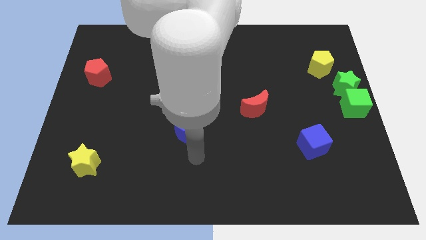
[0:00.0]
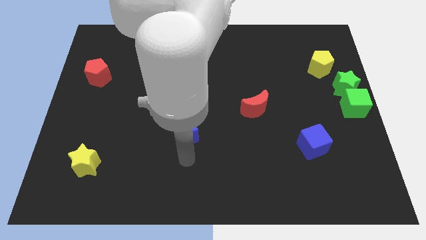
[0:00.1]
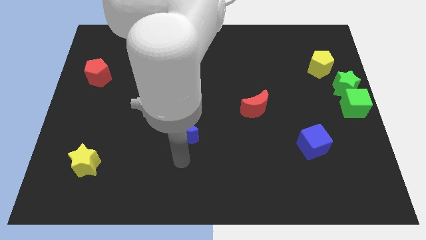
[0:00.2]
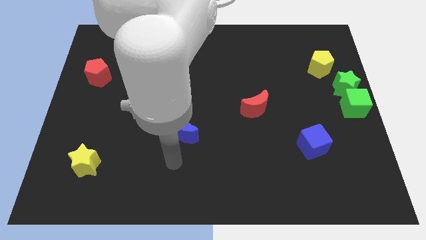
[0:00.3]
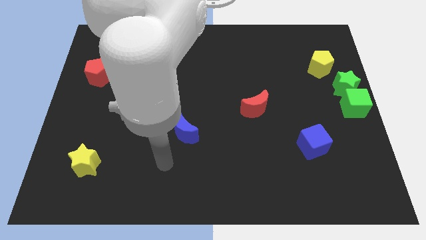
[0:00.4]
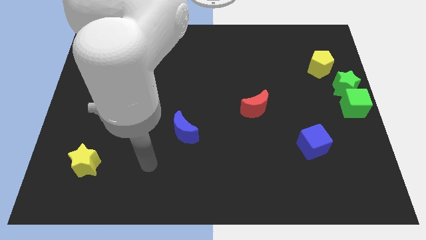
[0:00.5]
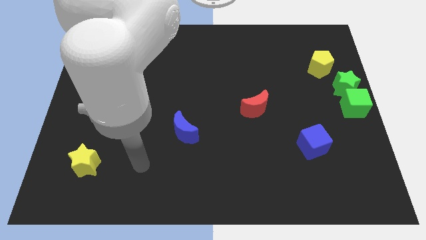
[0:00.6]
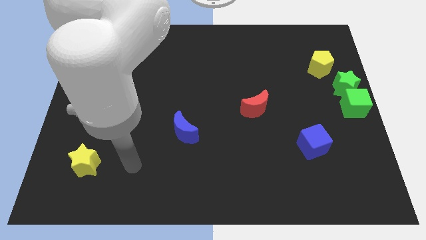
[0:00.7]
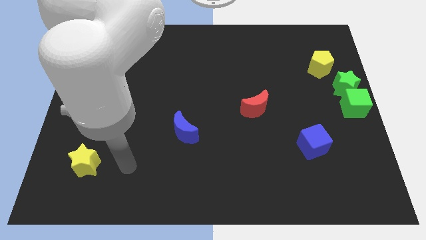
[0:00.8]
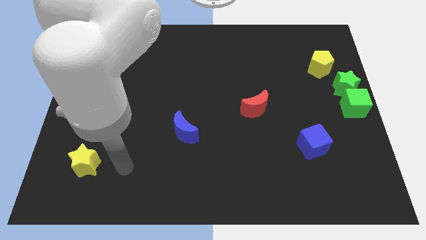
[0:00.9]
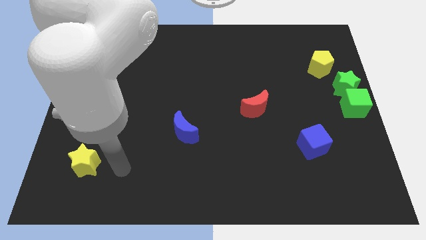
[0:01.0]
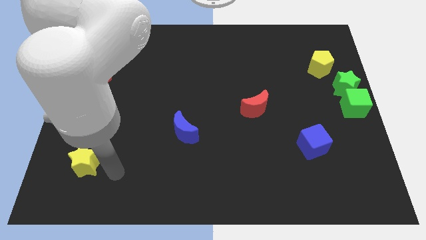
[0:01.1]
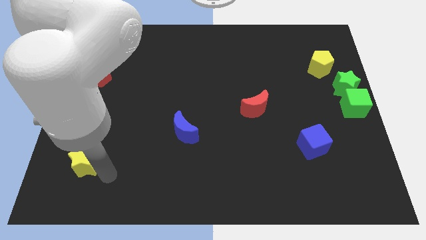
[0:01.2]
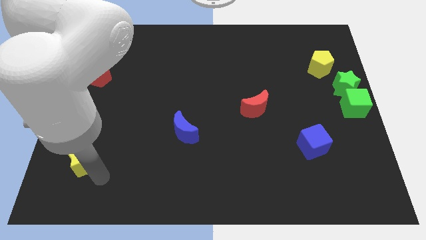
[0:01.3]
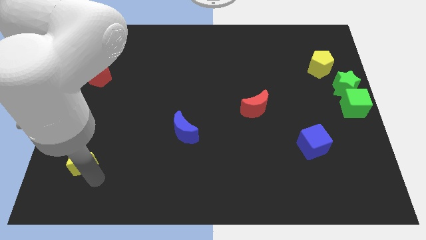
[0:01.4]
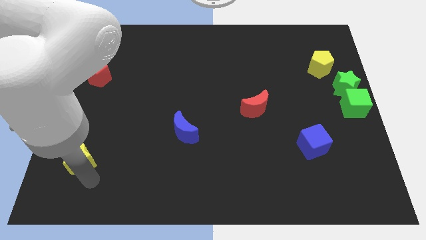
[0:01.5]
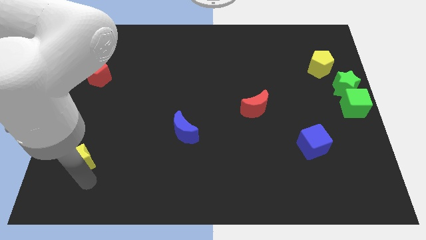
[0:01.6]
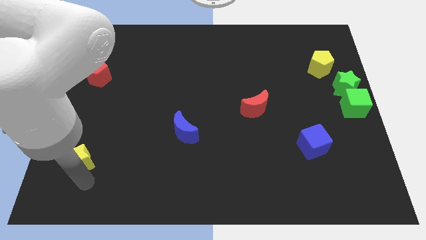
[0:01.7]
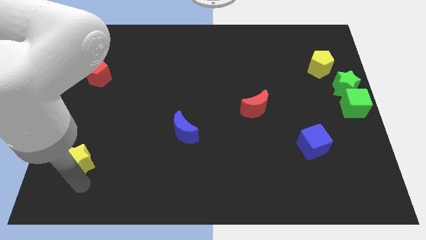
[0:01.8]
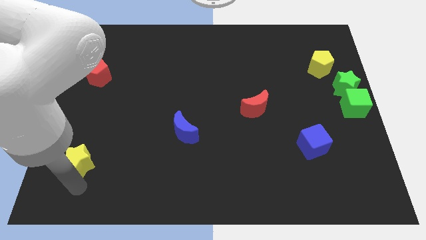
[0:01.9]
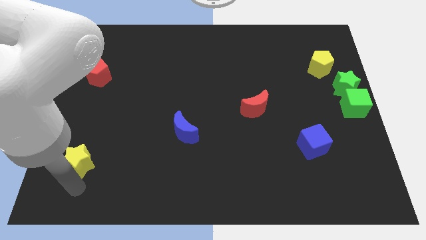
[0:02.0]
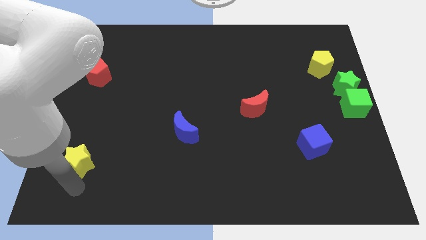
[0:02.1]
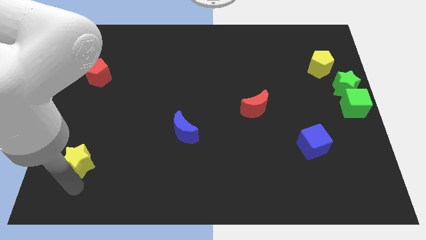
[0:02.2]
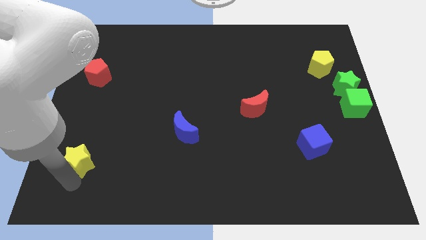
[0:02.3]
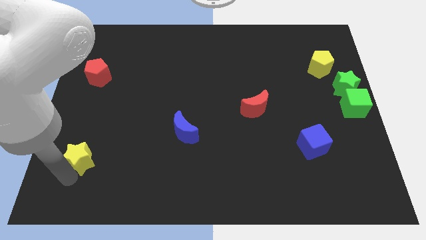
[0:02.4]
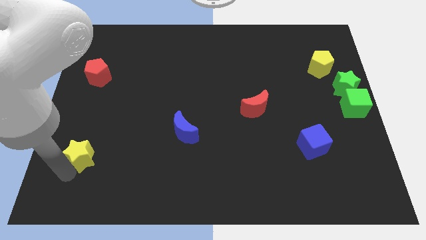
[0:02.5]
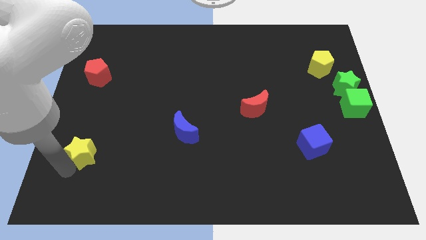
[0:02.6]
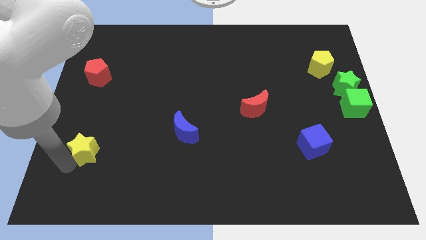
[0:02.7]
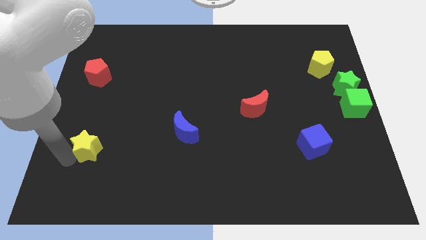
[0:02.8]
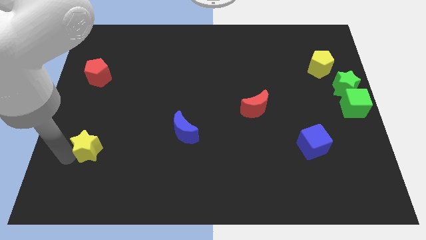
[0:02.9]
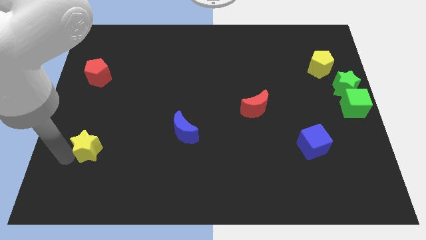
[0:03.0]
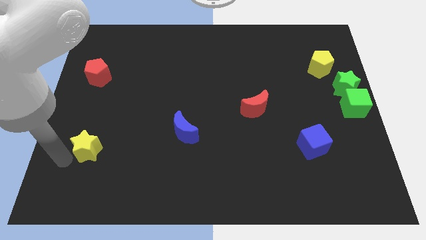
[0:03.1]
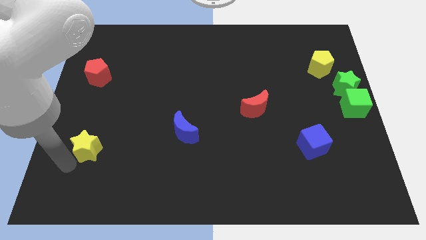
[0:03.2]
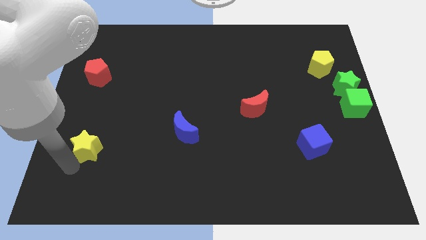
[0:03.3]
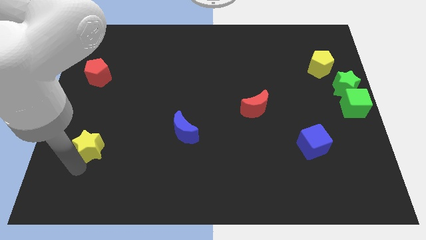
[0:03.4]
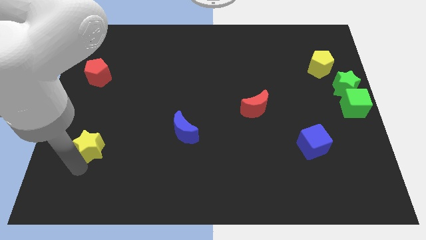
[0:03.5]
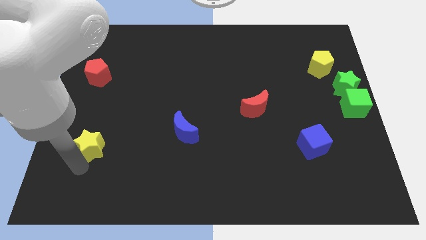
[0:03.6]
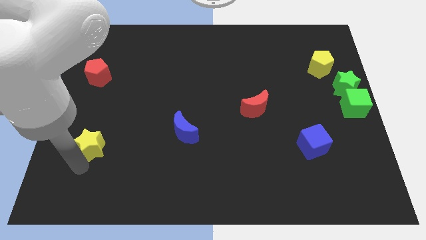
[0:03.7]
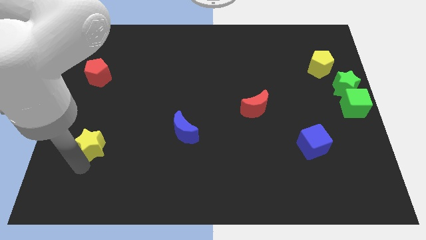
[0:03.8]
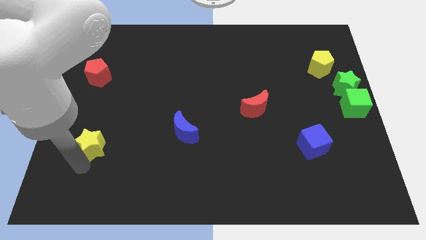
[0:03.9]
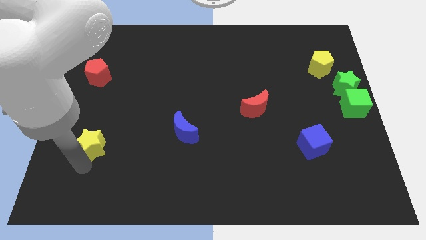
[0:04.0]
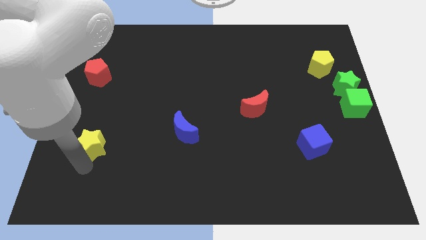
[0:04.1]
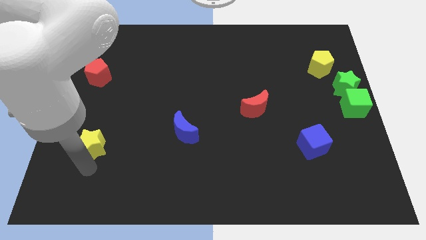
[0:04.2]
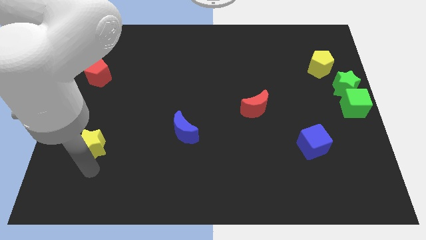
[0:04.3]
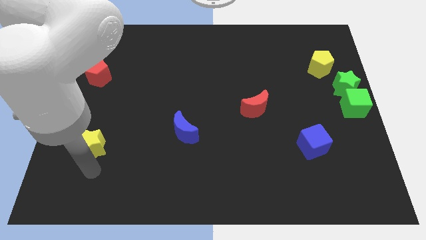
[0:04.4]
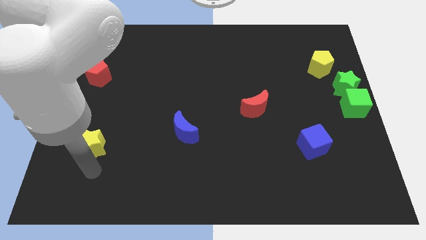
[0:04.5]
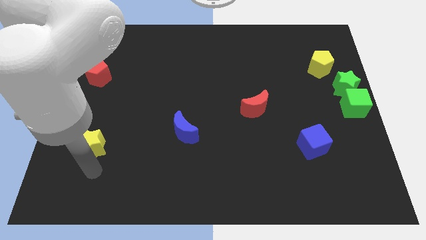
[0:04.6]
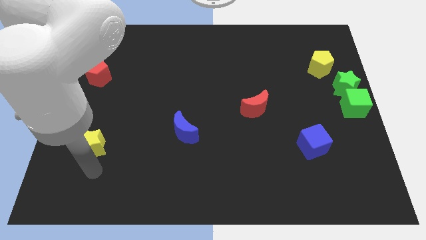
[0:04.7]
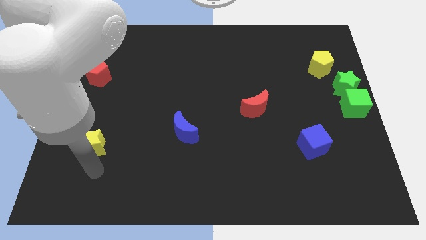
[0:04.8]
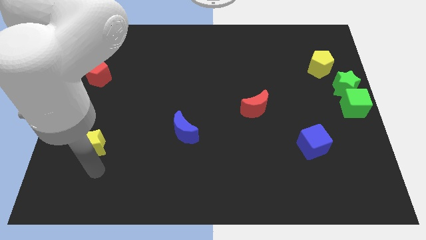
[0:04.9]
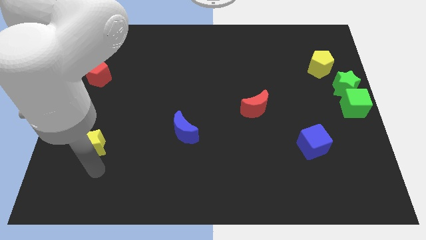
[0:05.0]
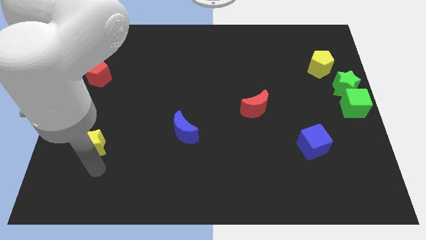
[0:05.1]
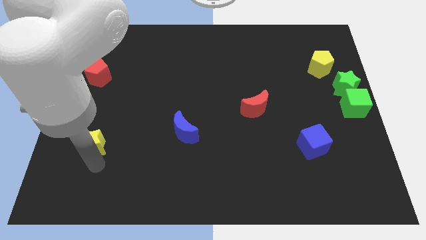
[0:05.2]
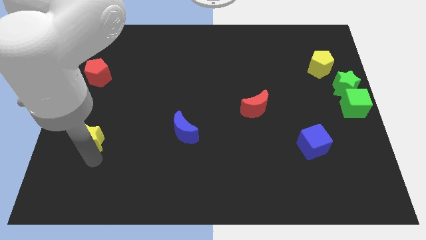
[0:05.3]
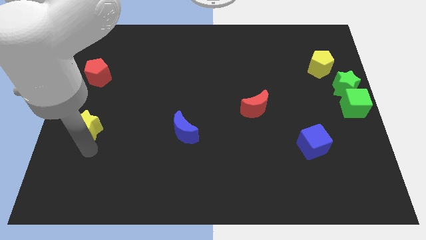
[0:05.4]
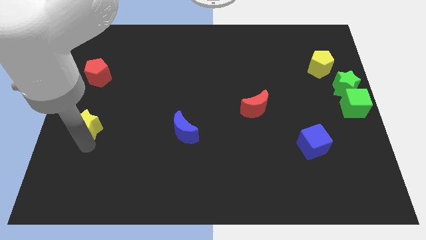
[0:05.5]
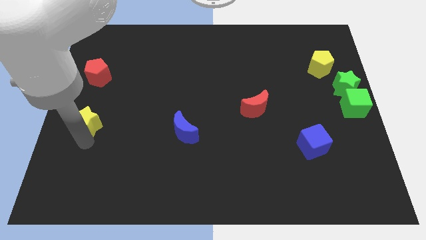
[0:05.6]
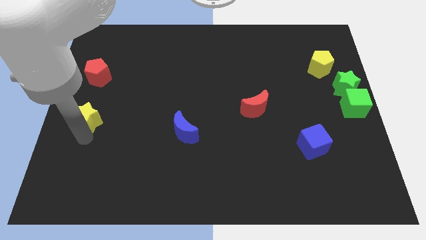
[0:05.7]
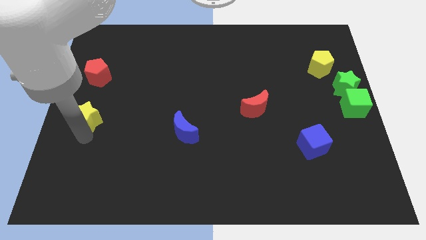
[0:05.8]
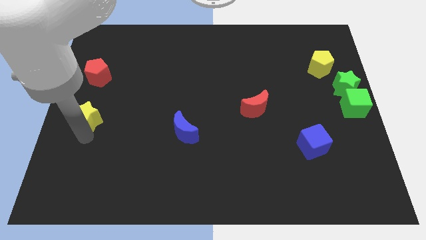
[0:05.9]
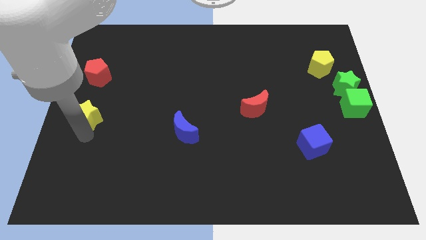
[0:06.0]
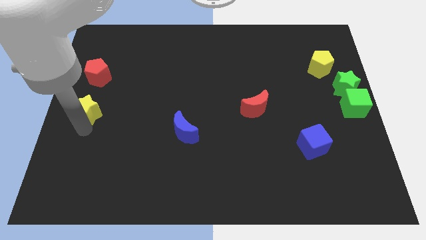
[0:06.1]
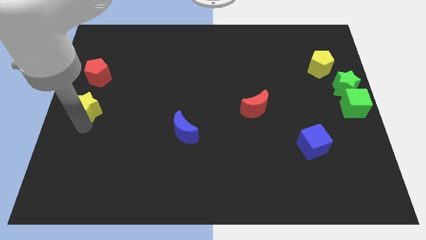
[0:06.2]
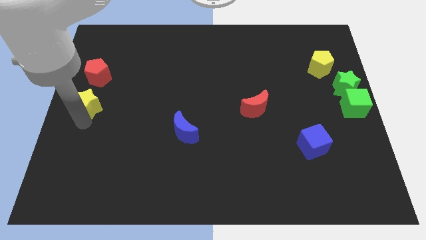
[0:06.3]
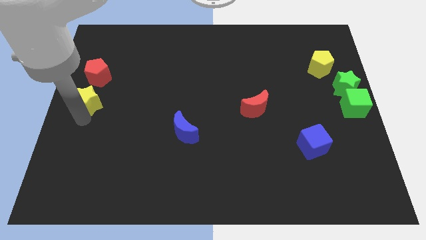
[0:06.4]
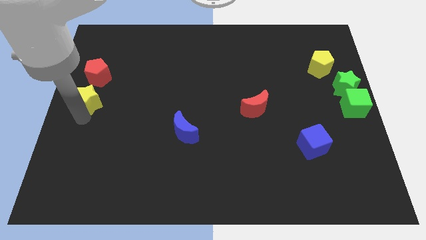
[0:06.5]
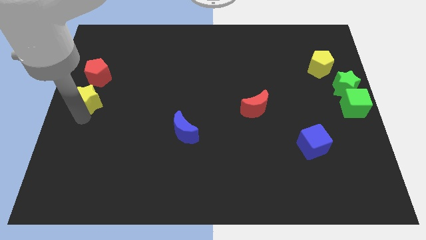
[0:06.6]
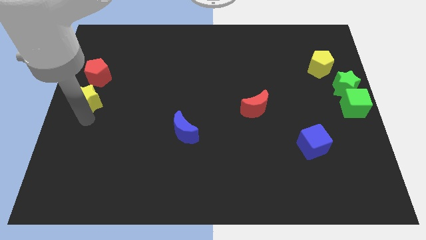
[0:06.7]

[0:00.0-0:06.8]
place the yellow star below the red pentagon

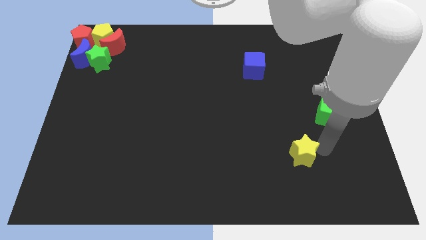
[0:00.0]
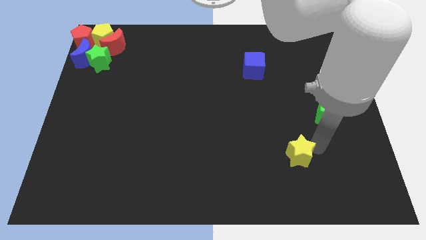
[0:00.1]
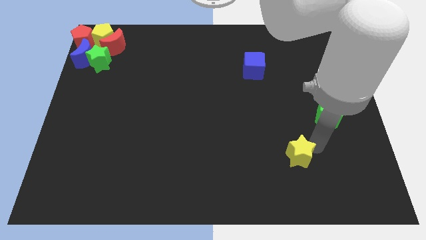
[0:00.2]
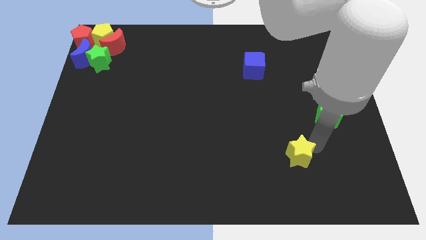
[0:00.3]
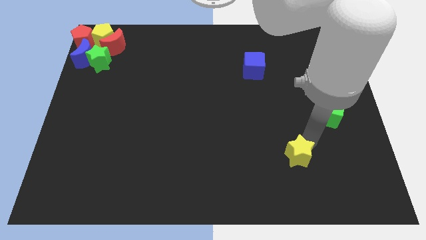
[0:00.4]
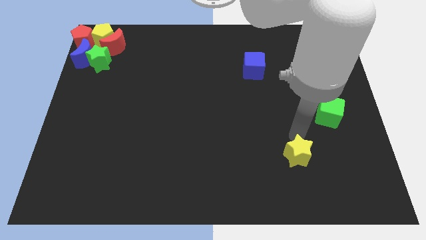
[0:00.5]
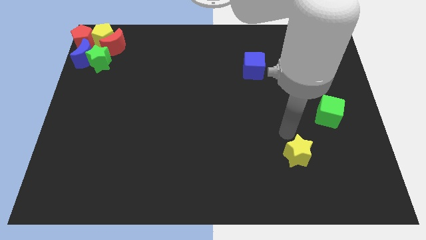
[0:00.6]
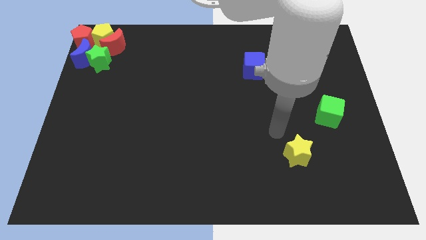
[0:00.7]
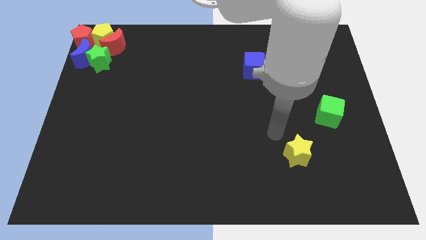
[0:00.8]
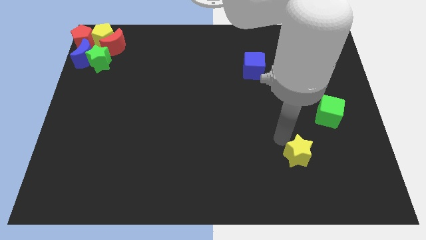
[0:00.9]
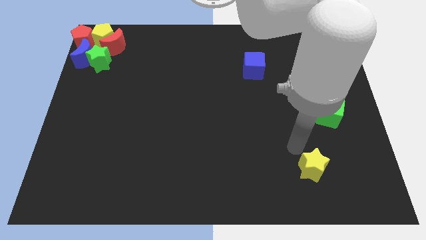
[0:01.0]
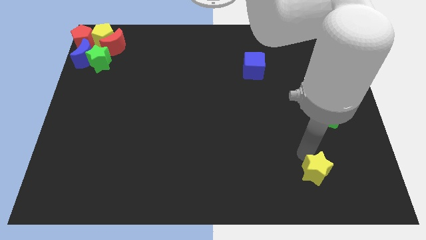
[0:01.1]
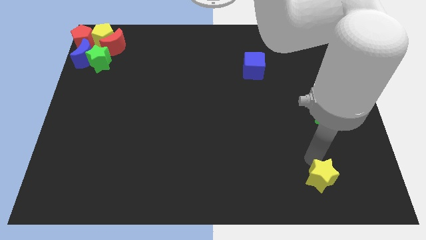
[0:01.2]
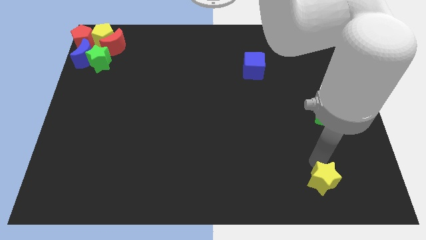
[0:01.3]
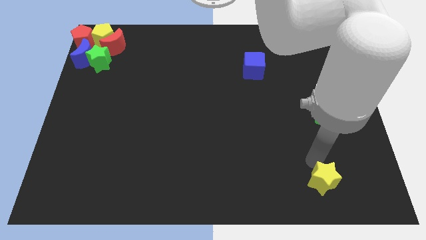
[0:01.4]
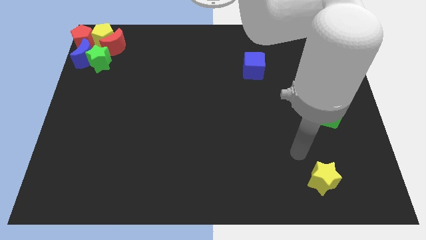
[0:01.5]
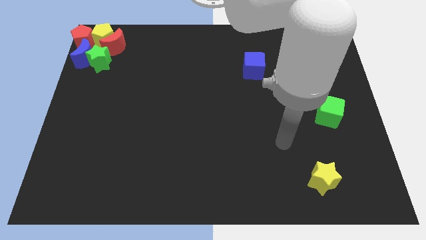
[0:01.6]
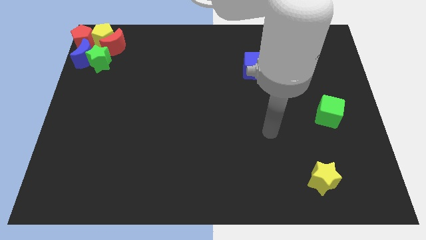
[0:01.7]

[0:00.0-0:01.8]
drag the yellow star to bottom right

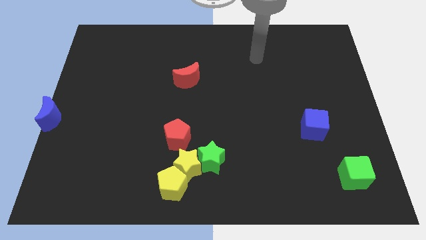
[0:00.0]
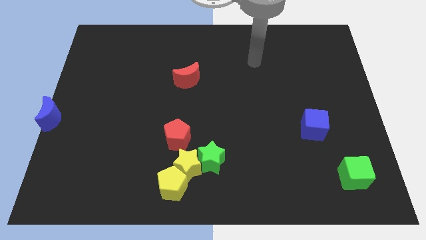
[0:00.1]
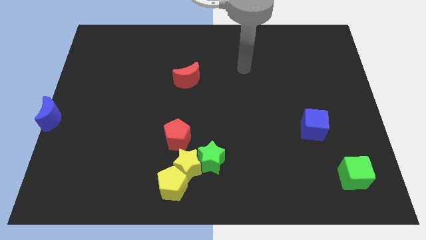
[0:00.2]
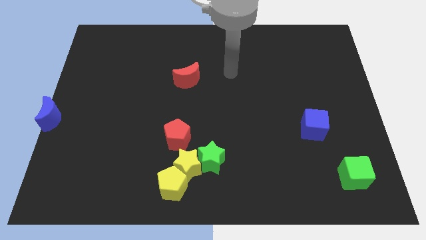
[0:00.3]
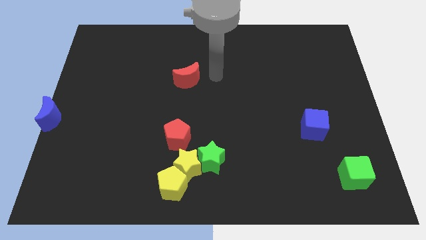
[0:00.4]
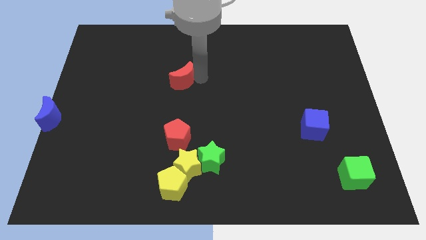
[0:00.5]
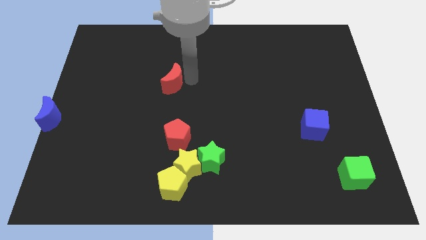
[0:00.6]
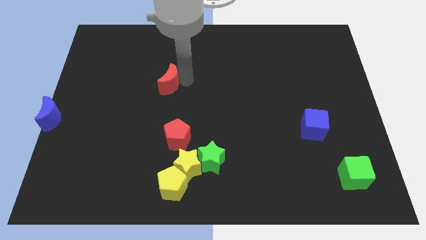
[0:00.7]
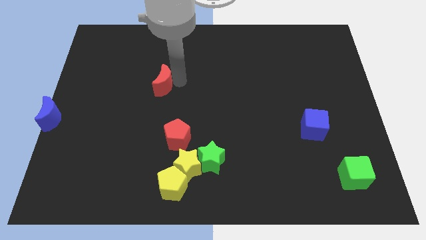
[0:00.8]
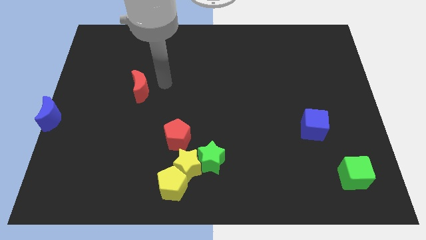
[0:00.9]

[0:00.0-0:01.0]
push the red crescent to the left of the board
